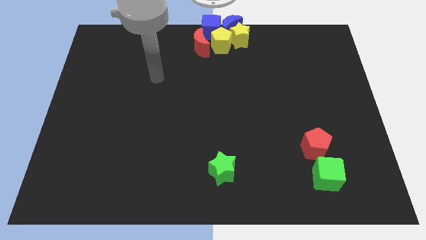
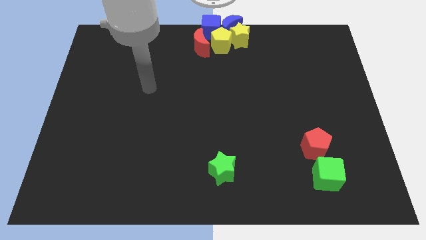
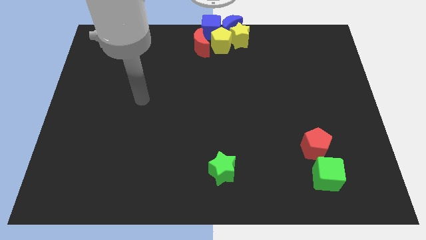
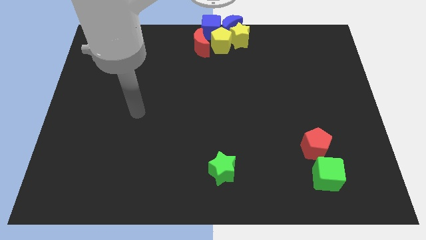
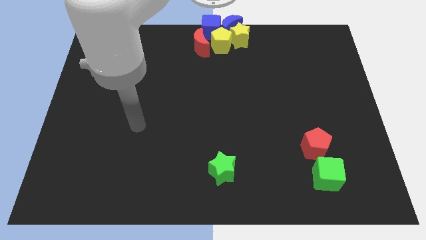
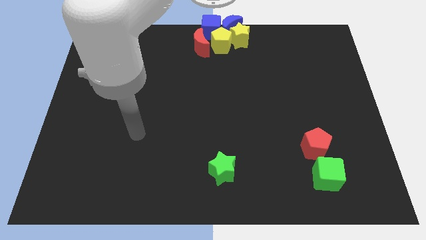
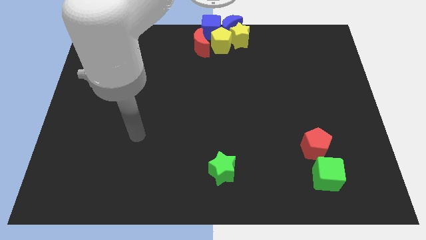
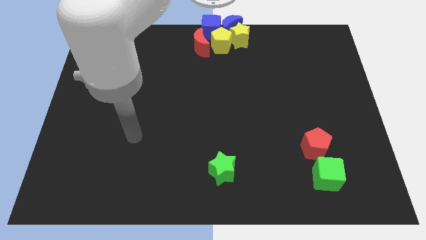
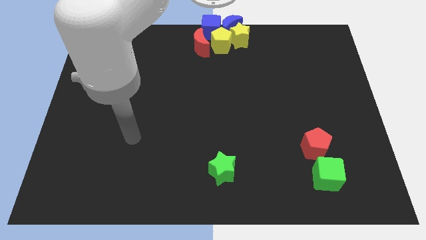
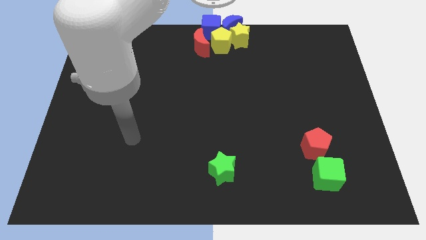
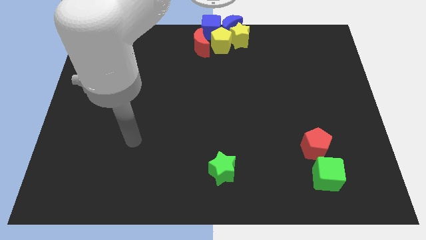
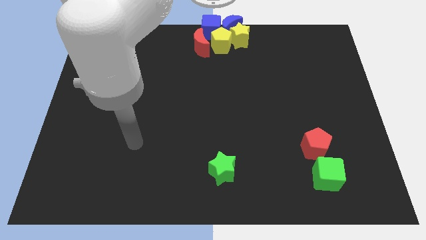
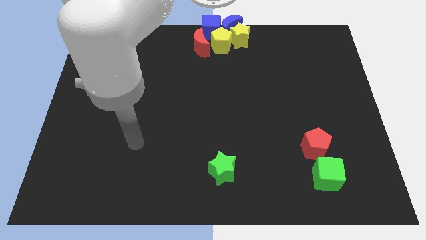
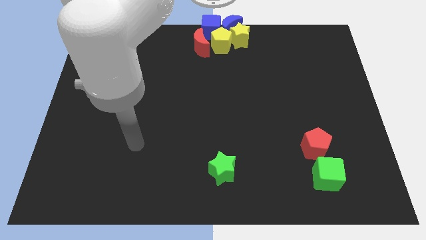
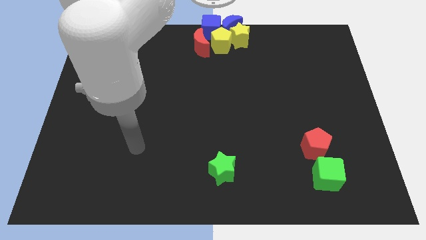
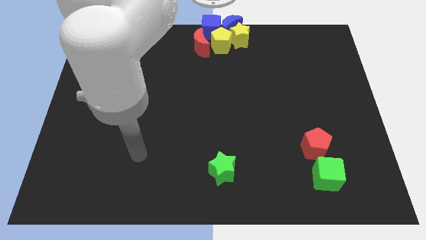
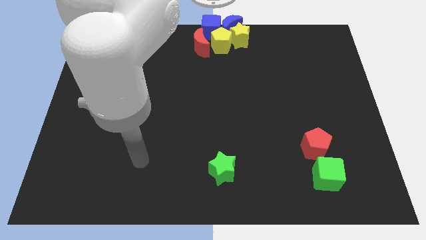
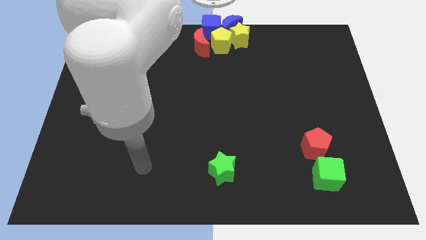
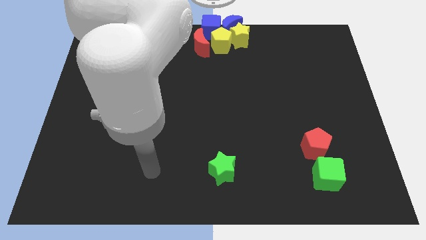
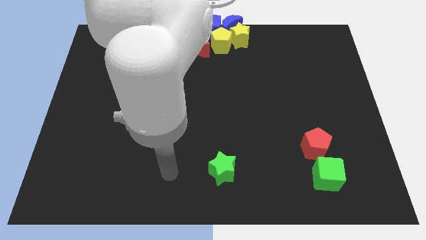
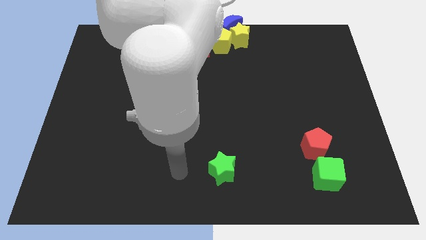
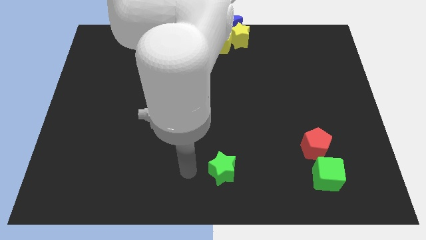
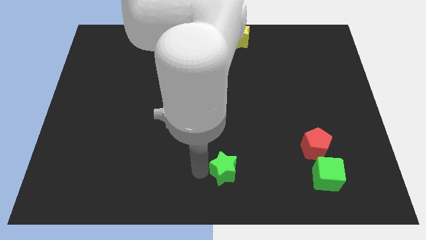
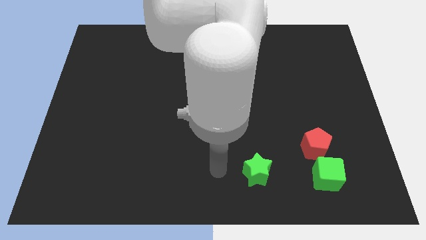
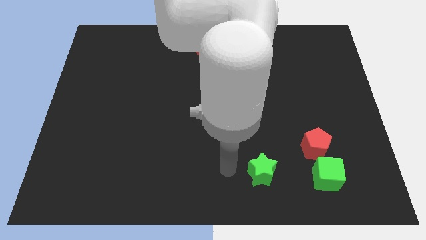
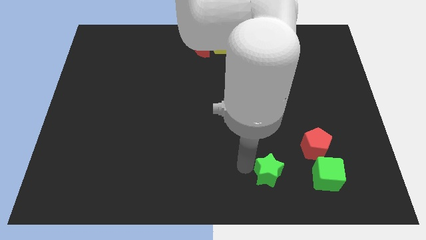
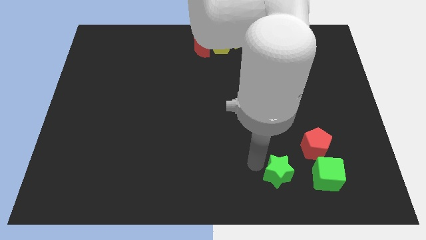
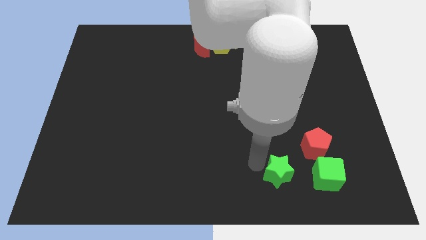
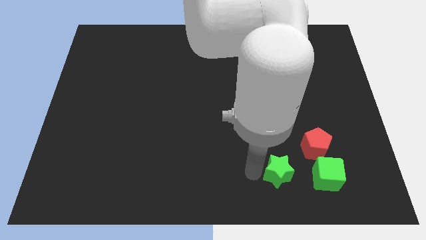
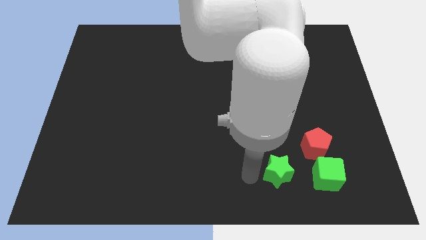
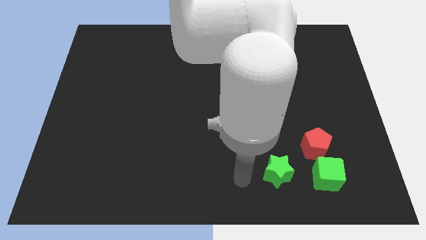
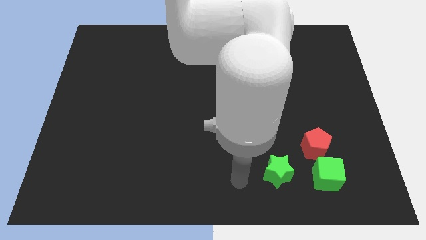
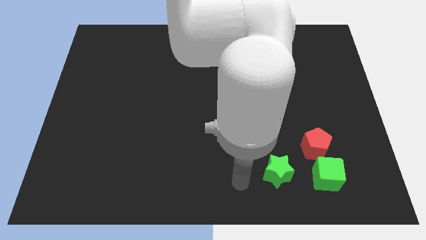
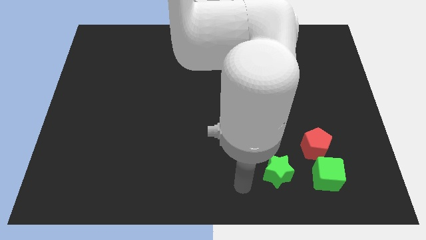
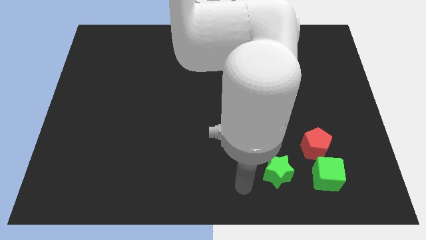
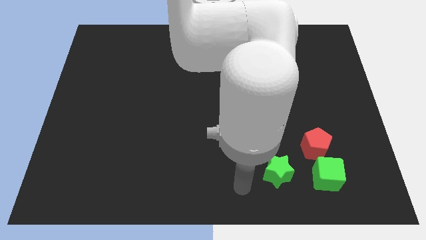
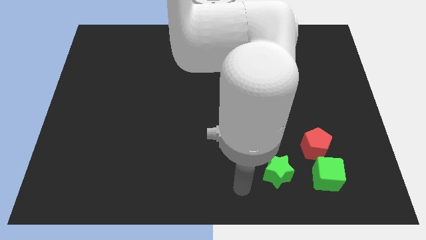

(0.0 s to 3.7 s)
move the green star into the red pentagon

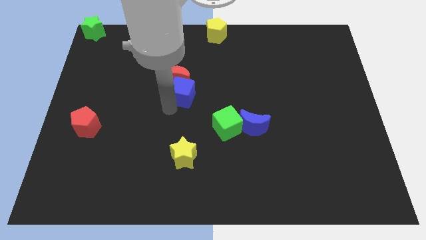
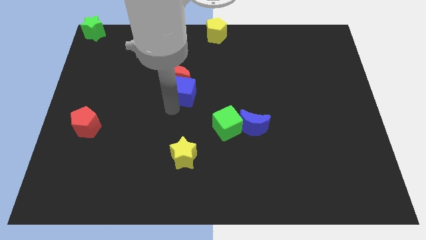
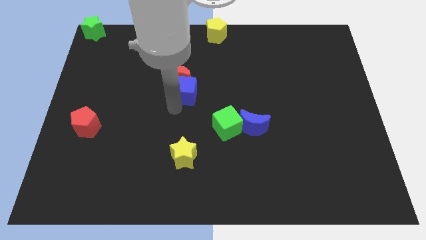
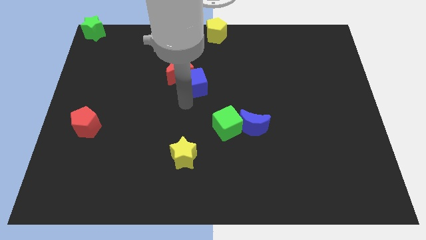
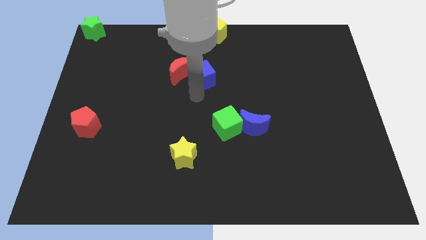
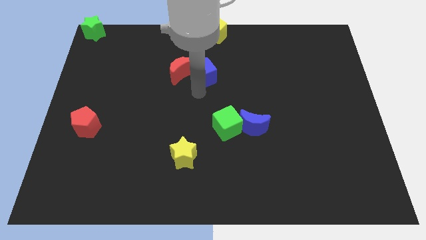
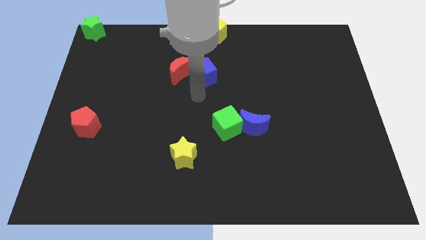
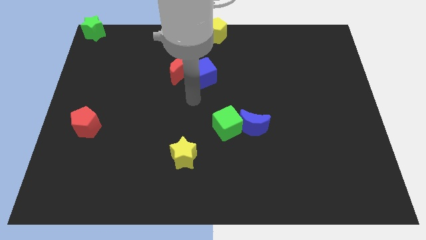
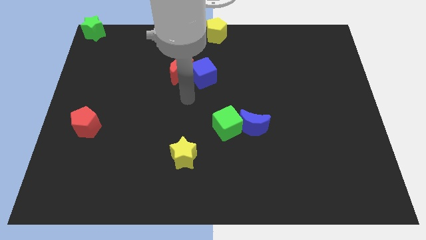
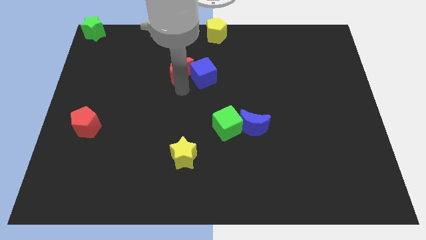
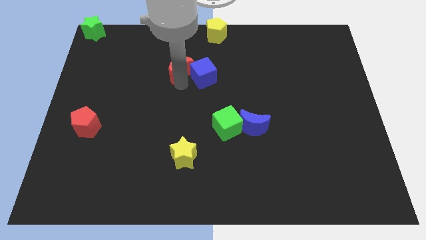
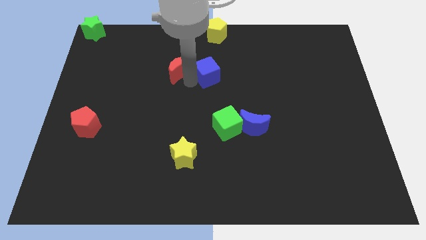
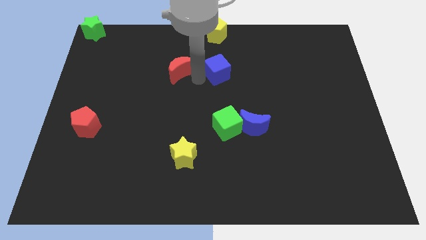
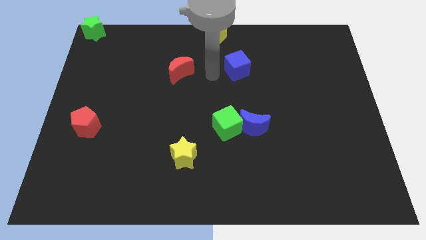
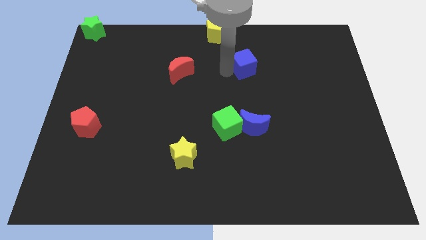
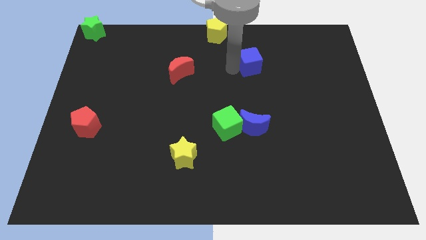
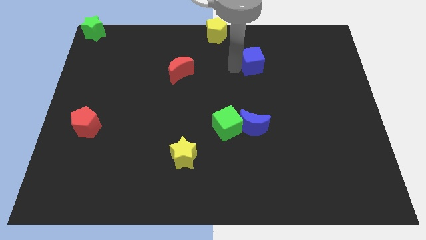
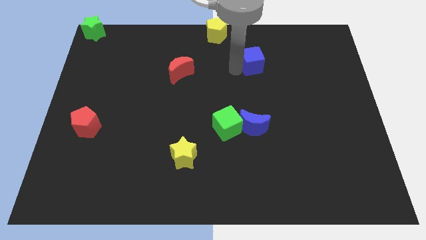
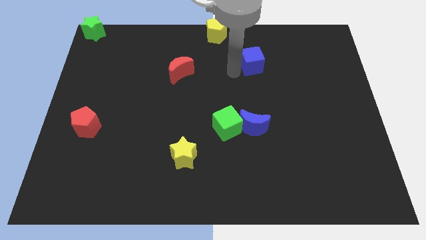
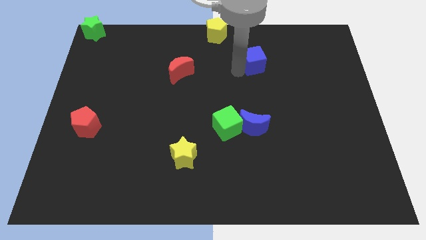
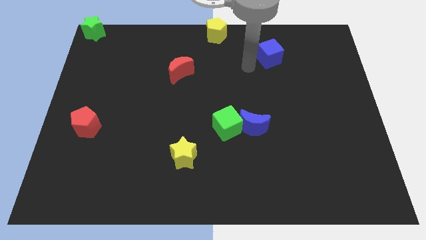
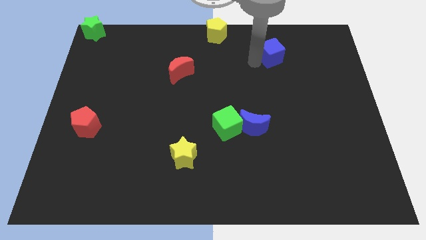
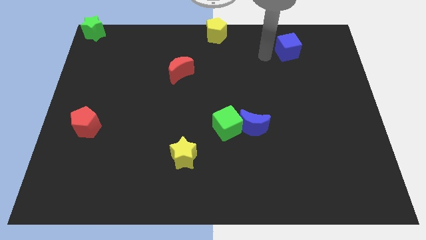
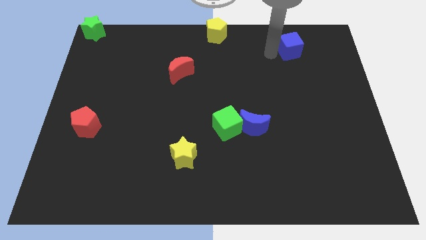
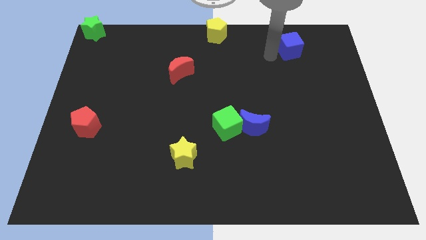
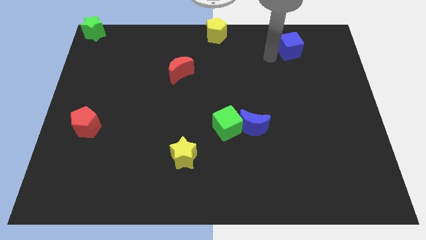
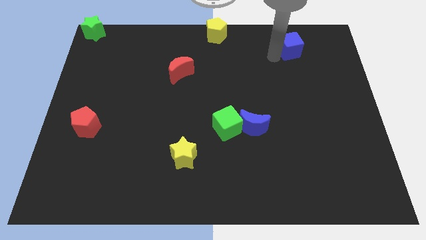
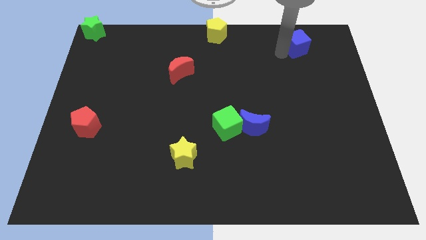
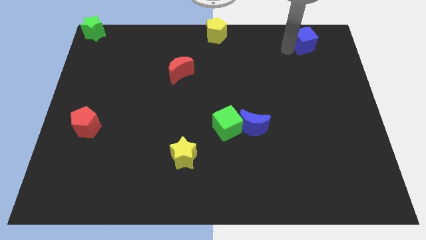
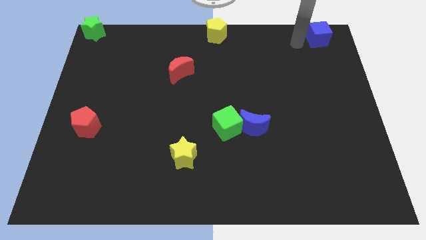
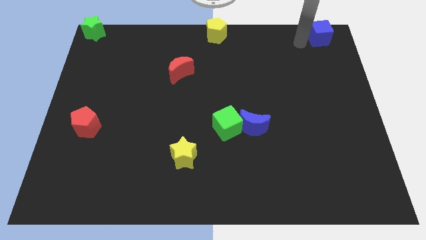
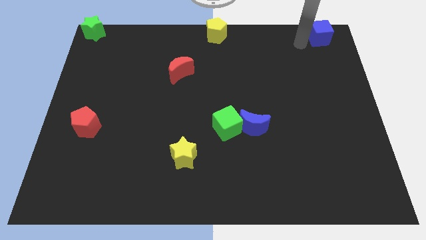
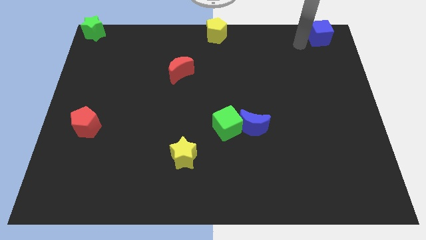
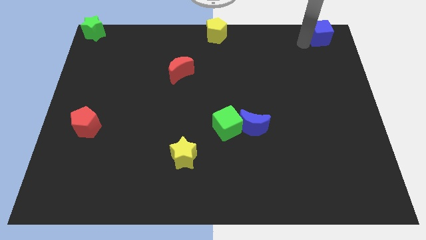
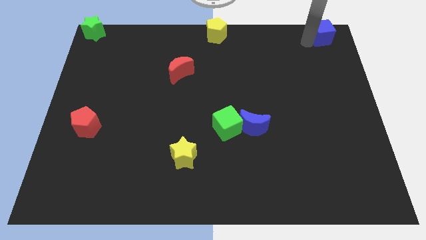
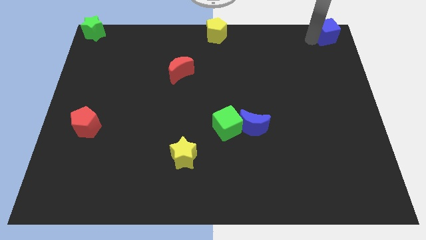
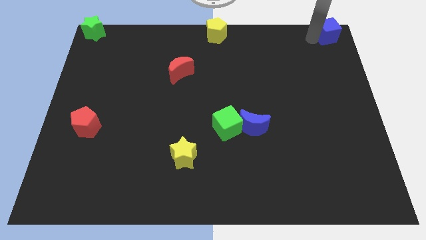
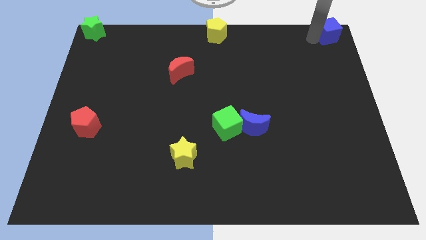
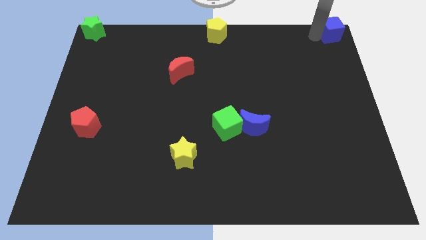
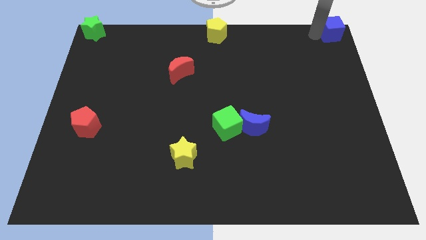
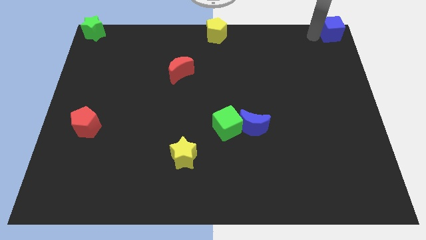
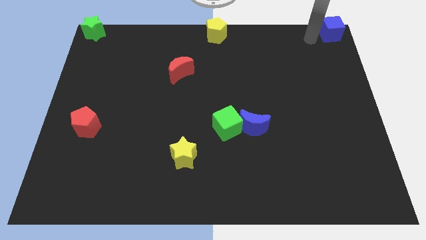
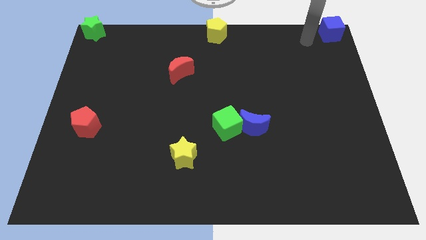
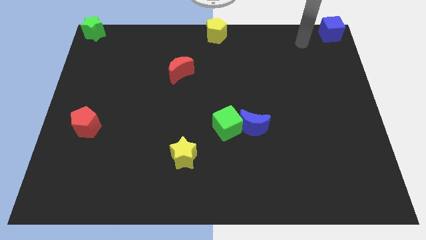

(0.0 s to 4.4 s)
slide the blue cube to the top right corner of the board

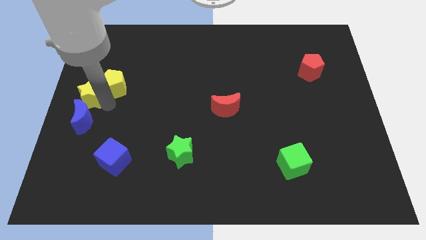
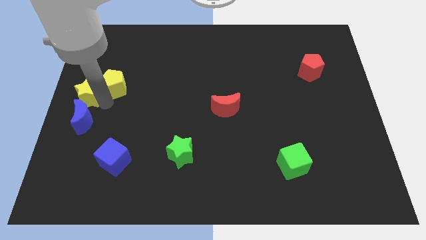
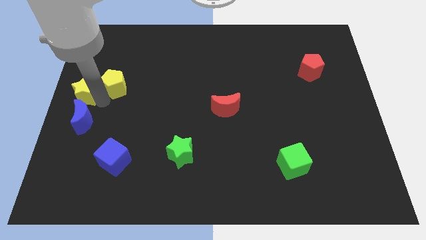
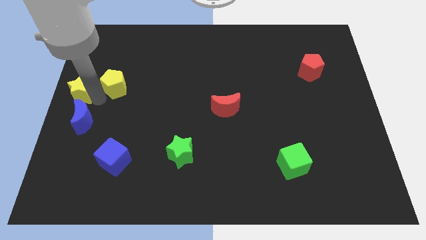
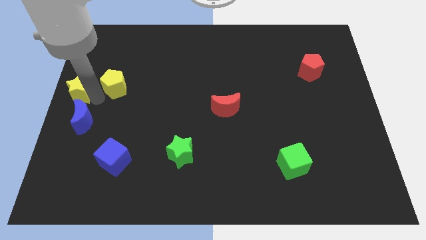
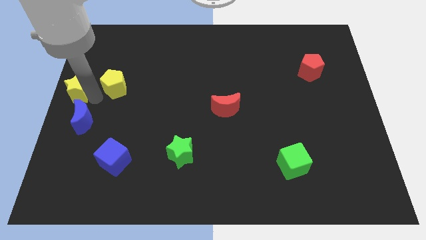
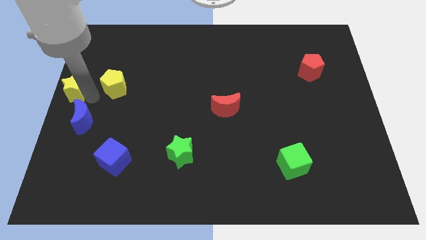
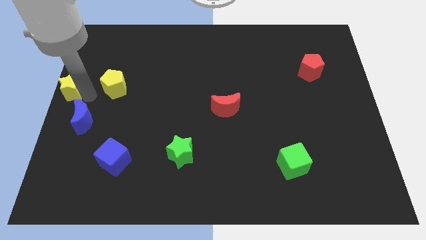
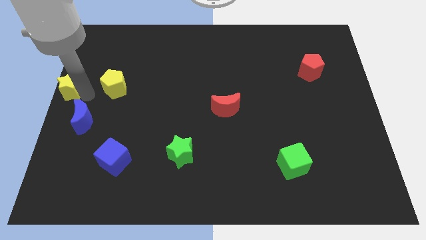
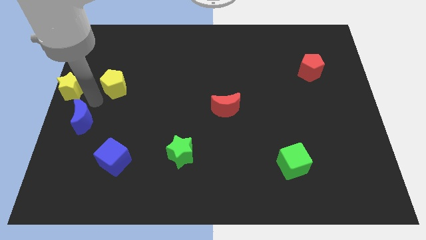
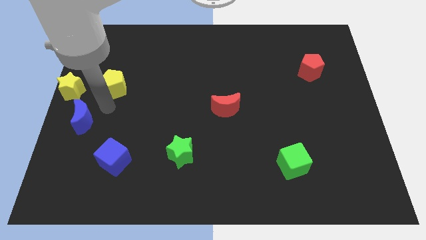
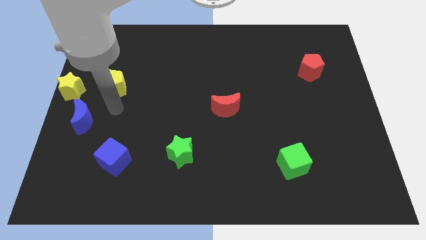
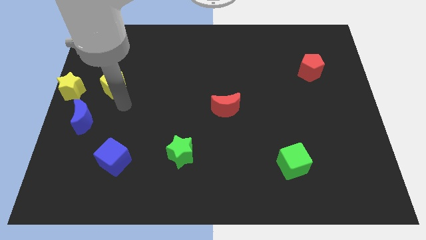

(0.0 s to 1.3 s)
drag the yellow star to center left
